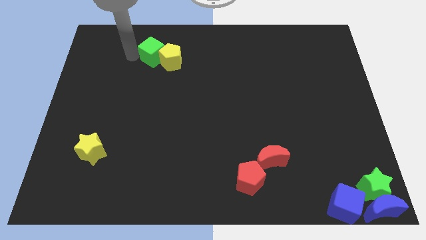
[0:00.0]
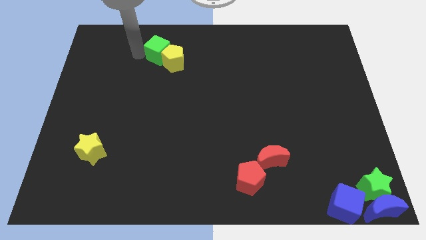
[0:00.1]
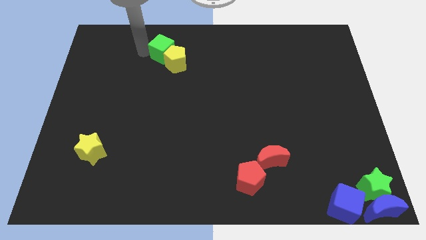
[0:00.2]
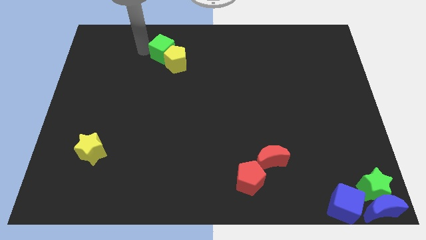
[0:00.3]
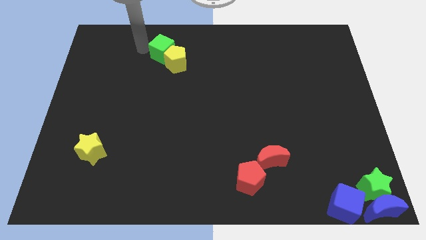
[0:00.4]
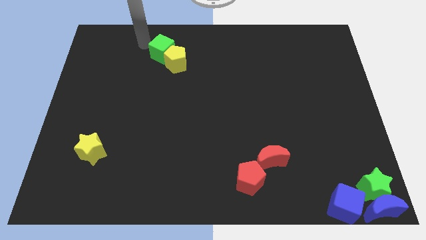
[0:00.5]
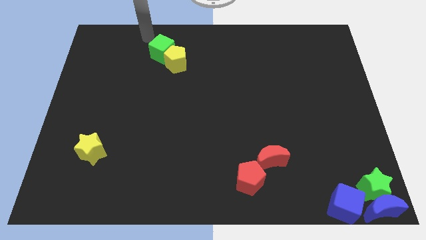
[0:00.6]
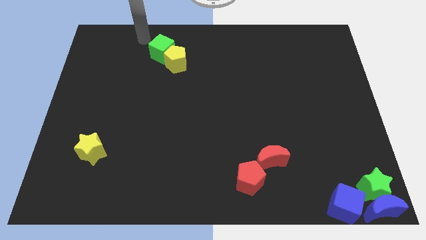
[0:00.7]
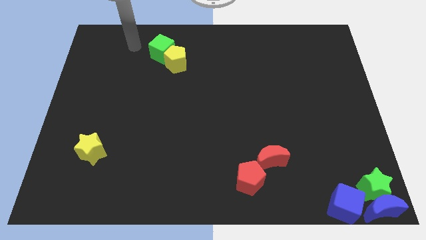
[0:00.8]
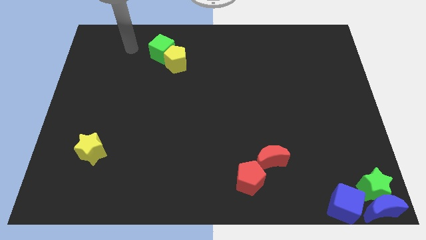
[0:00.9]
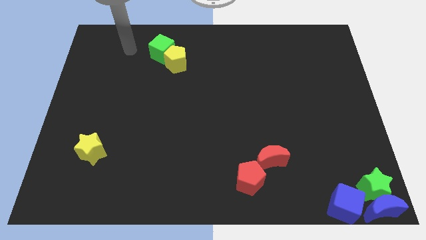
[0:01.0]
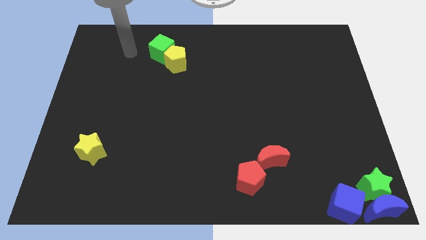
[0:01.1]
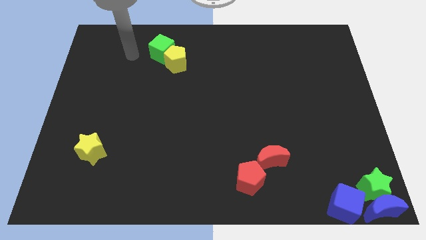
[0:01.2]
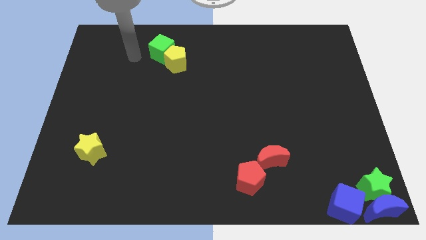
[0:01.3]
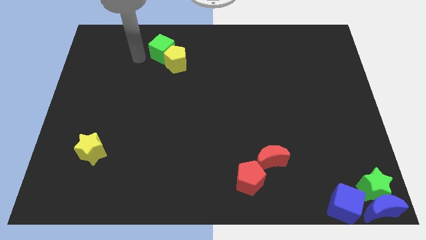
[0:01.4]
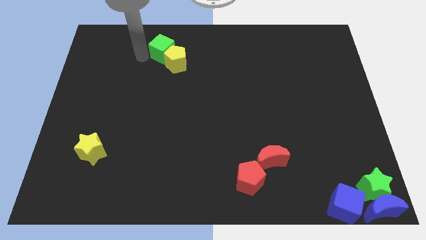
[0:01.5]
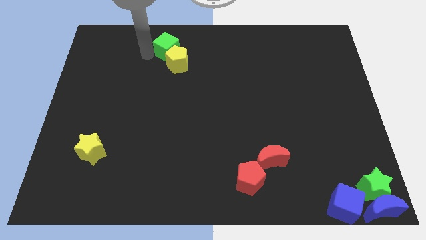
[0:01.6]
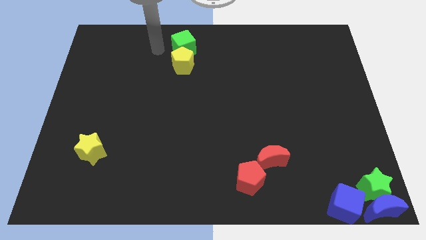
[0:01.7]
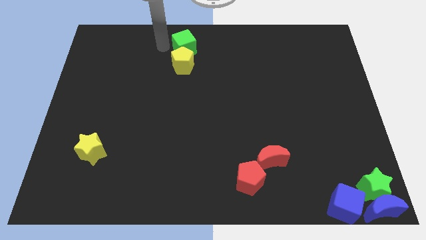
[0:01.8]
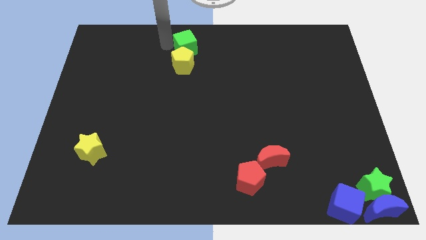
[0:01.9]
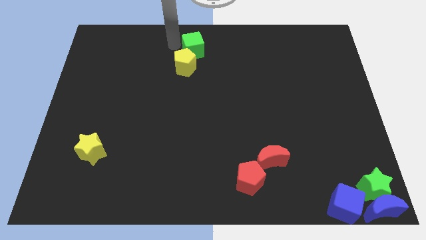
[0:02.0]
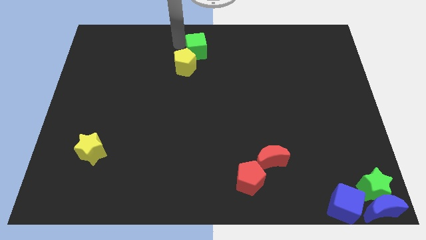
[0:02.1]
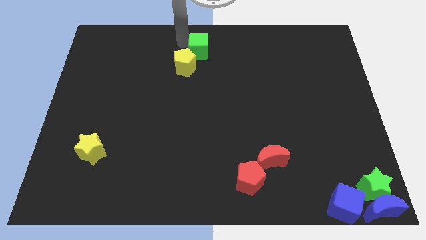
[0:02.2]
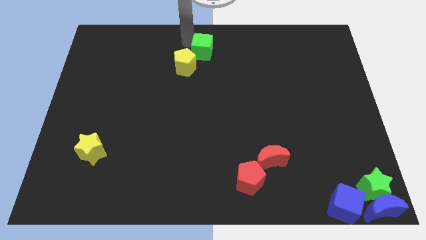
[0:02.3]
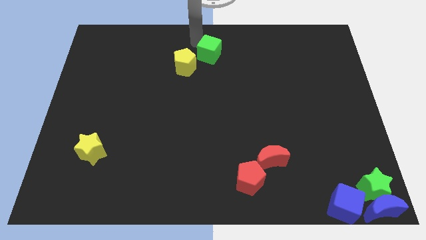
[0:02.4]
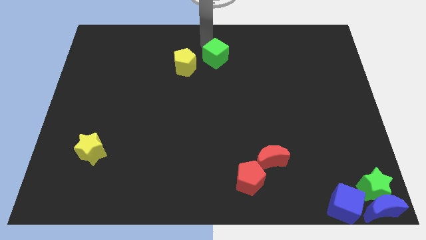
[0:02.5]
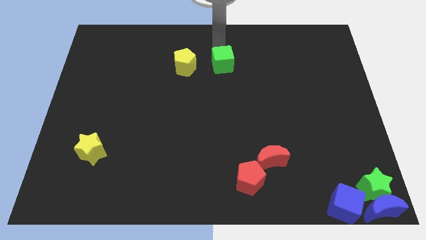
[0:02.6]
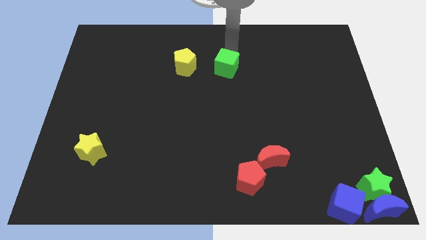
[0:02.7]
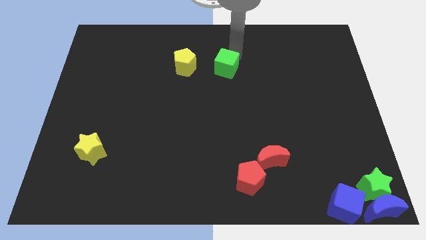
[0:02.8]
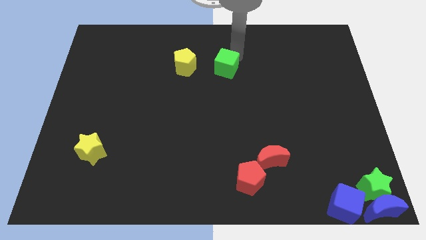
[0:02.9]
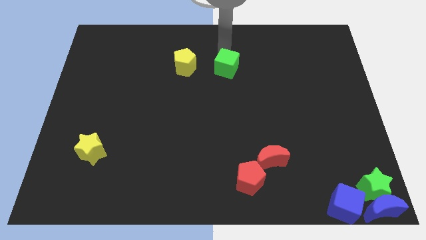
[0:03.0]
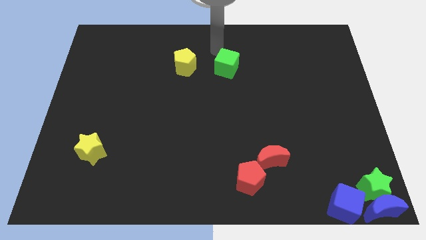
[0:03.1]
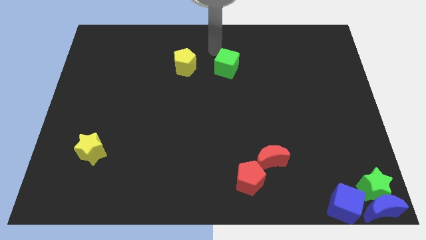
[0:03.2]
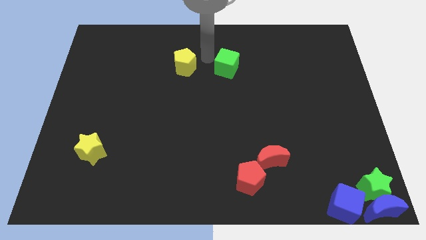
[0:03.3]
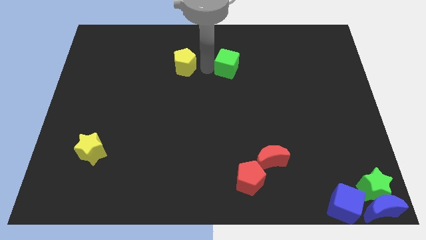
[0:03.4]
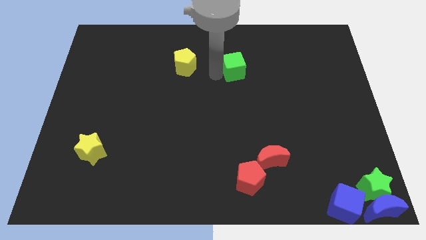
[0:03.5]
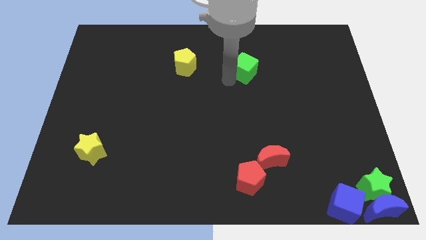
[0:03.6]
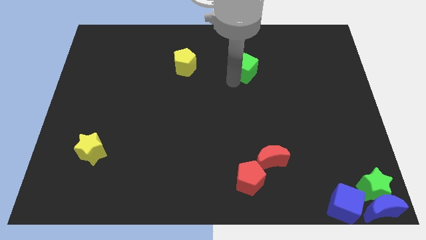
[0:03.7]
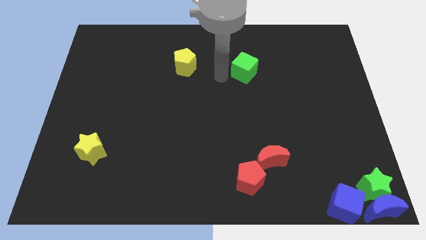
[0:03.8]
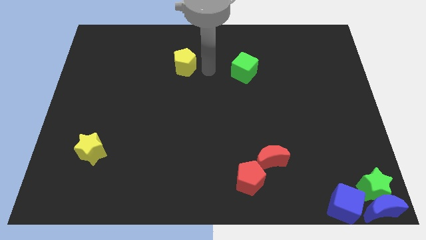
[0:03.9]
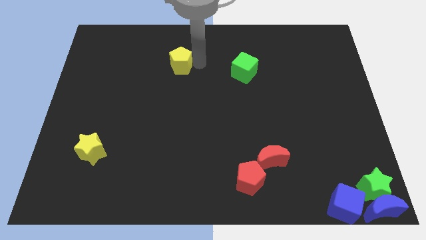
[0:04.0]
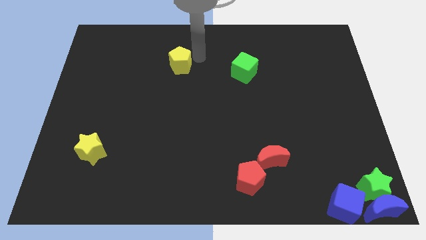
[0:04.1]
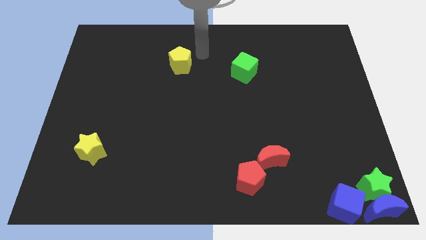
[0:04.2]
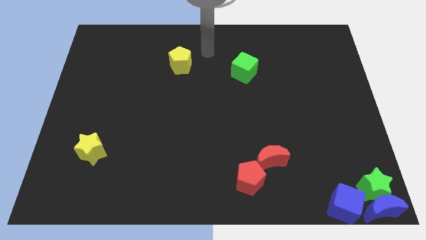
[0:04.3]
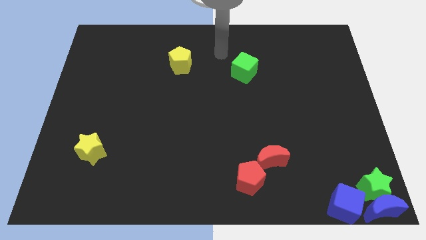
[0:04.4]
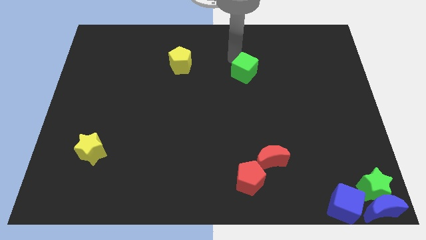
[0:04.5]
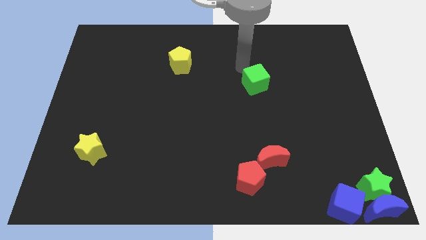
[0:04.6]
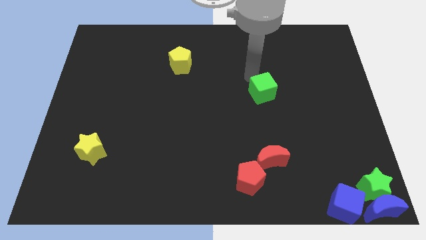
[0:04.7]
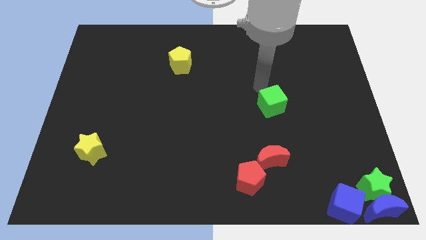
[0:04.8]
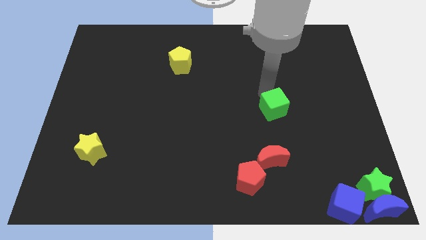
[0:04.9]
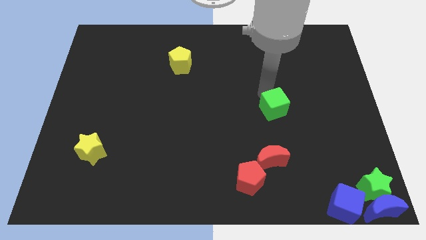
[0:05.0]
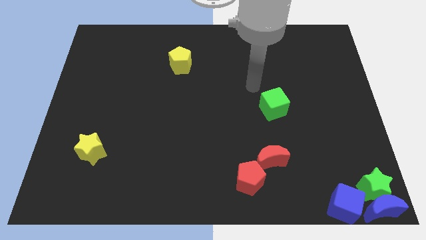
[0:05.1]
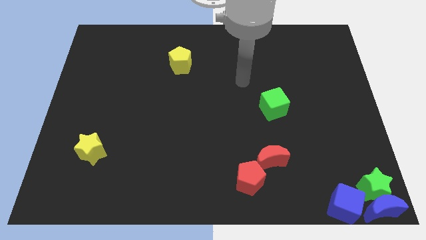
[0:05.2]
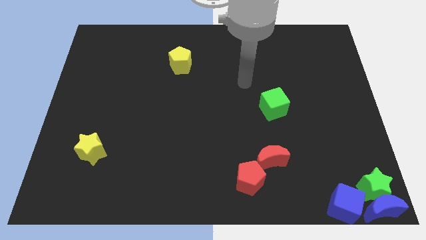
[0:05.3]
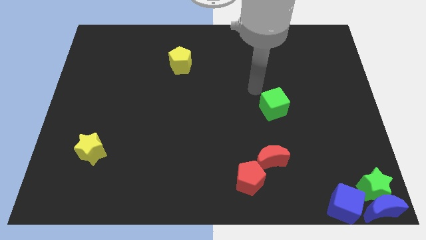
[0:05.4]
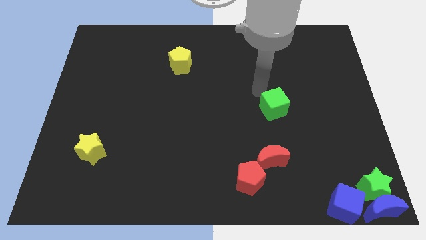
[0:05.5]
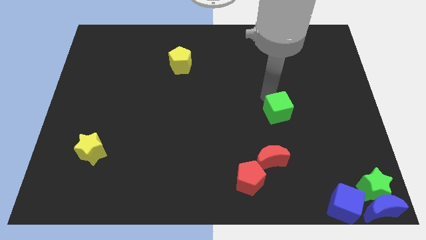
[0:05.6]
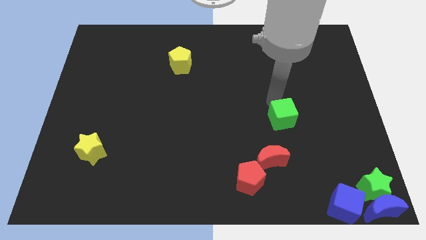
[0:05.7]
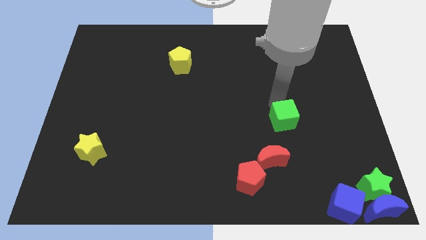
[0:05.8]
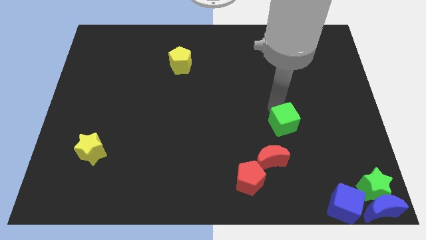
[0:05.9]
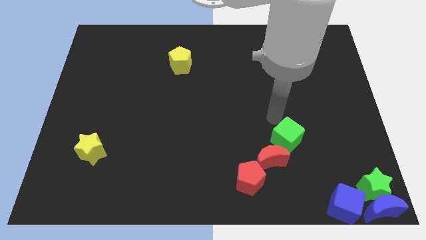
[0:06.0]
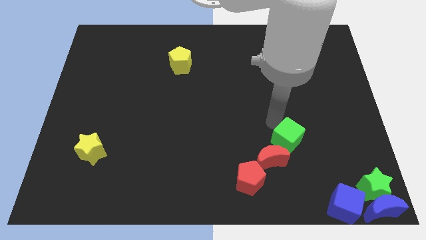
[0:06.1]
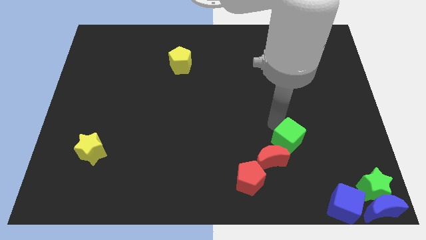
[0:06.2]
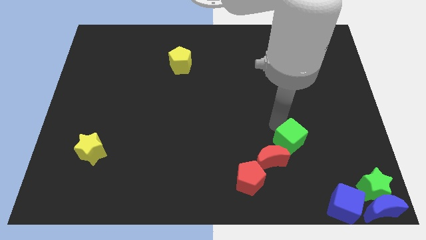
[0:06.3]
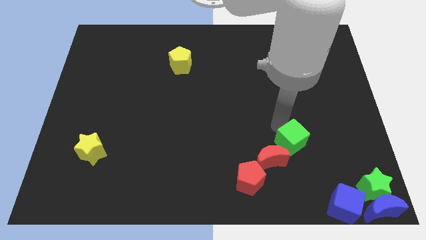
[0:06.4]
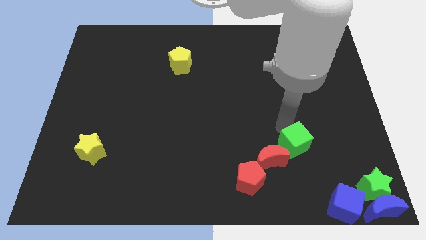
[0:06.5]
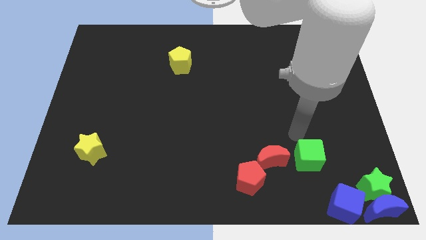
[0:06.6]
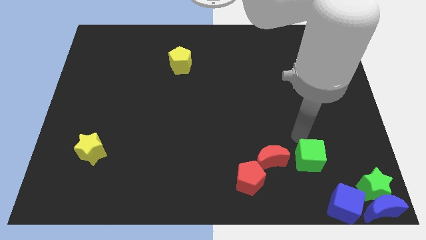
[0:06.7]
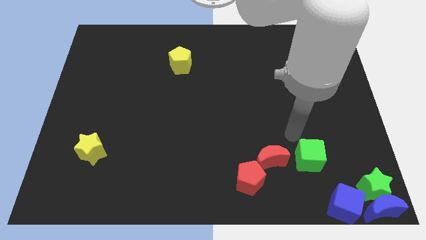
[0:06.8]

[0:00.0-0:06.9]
put the green star parallel right of the red moon

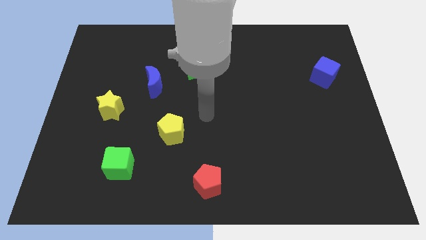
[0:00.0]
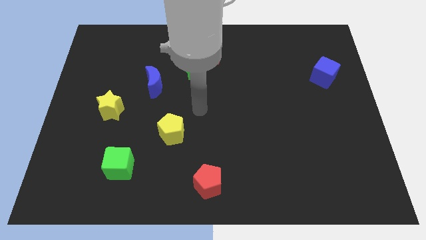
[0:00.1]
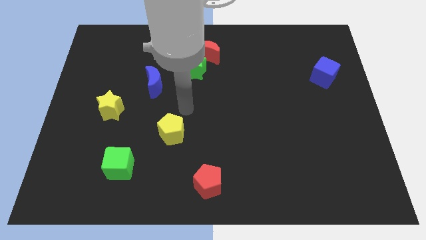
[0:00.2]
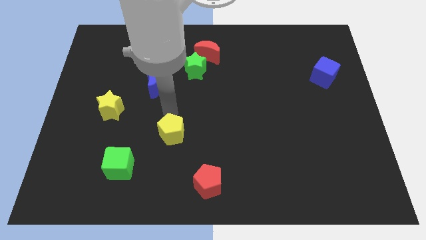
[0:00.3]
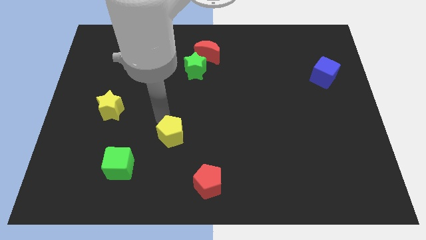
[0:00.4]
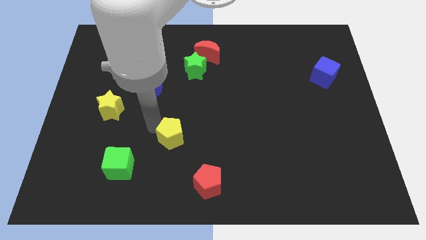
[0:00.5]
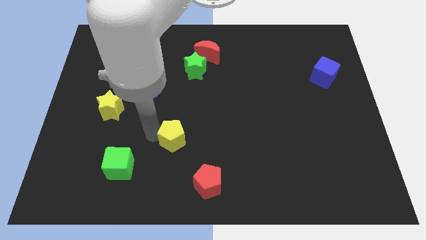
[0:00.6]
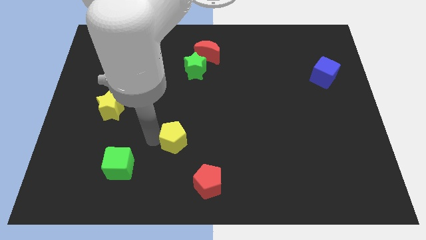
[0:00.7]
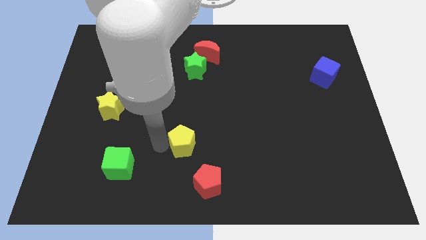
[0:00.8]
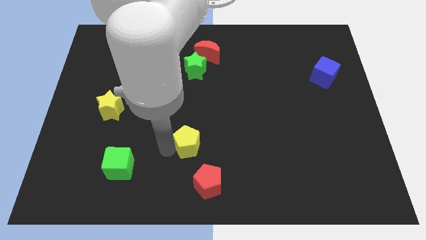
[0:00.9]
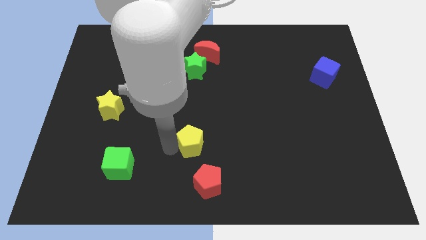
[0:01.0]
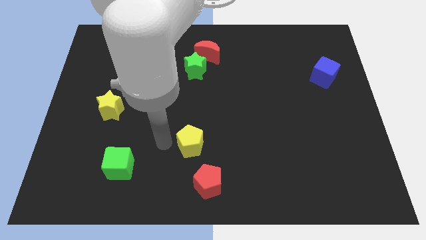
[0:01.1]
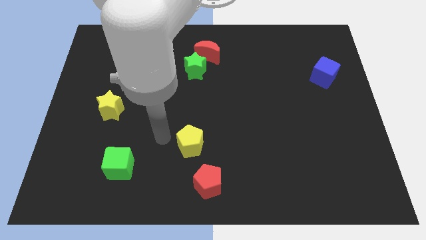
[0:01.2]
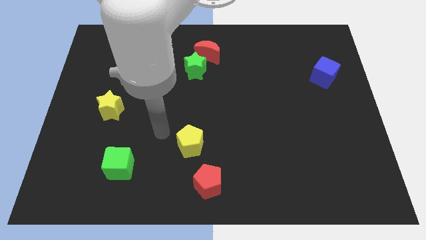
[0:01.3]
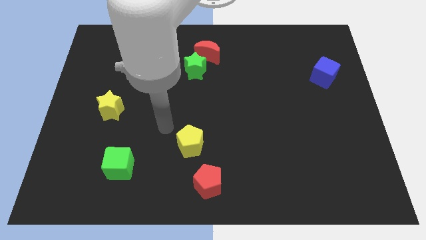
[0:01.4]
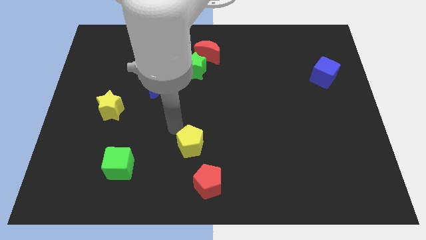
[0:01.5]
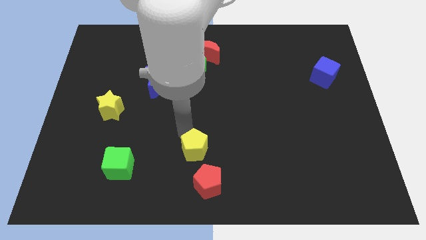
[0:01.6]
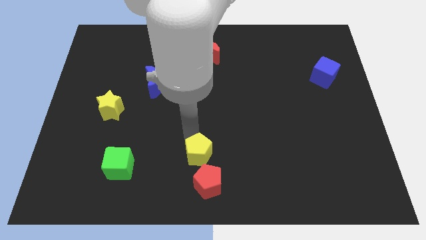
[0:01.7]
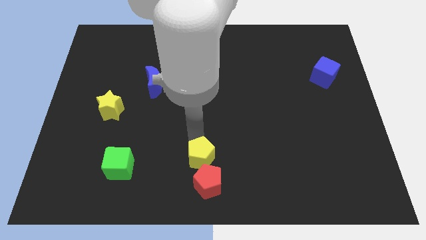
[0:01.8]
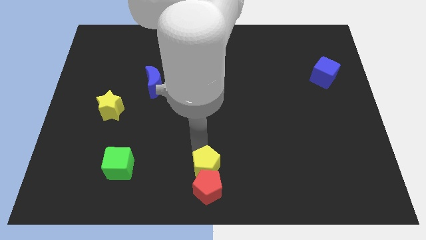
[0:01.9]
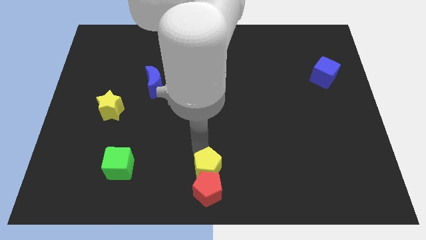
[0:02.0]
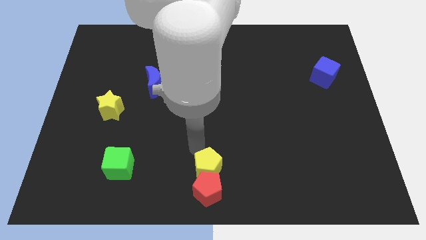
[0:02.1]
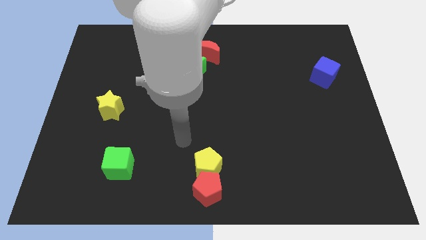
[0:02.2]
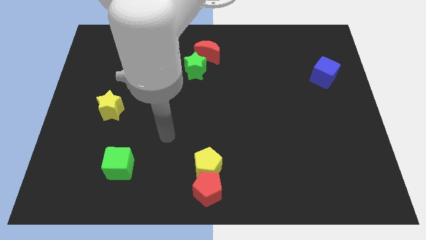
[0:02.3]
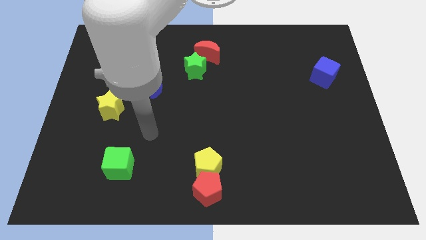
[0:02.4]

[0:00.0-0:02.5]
place the yellow pentagon below the red pentagon
